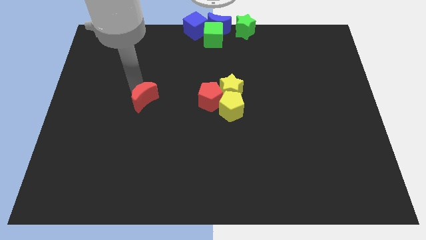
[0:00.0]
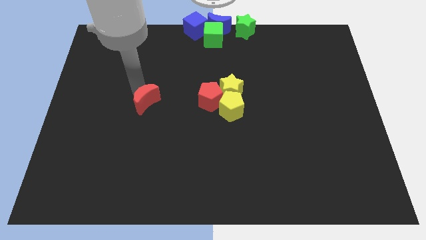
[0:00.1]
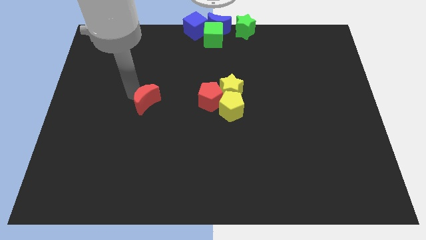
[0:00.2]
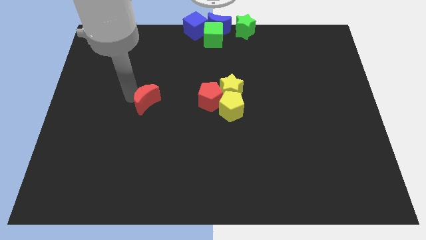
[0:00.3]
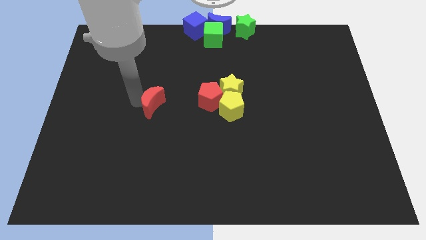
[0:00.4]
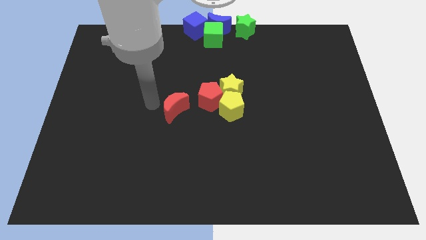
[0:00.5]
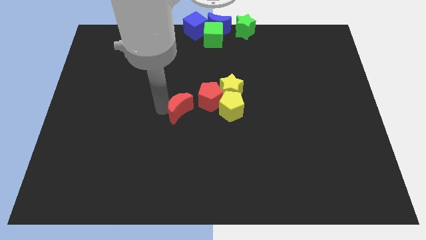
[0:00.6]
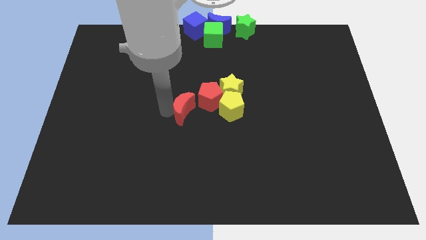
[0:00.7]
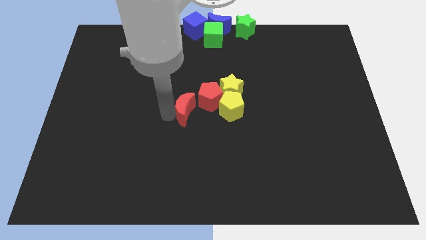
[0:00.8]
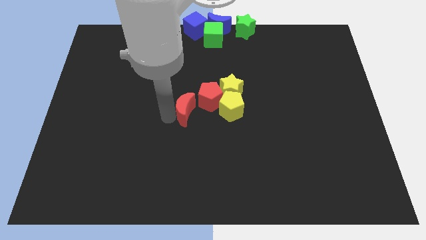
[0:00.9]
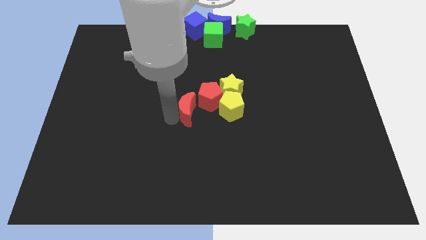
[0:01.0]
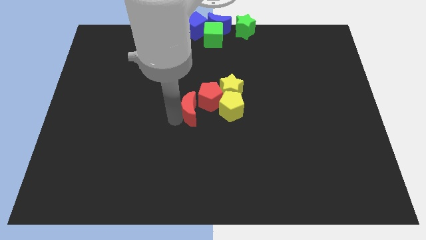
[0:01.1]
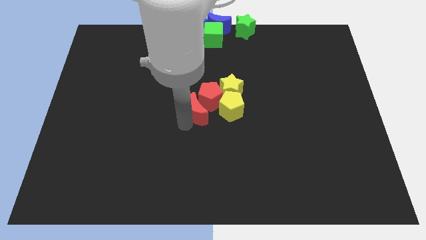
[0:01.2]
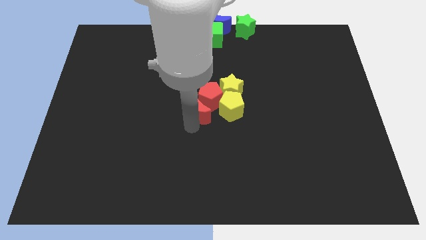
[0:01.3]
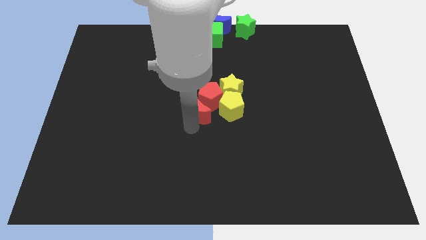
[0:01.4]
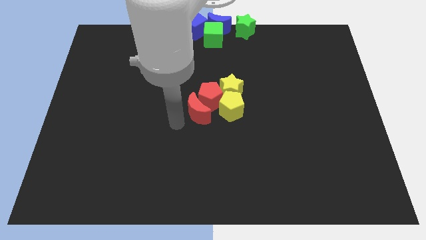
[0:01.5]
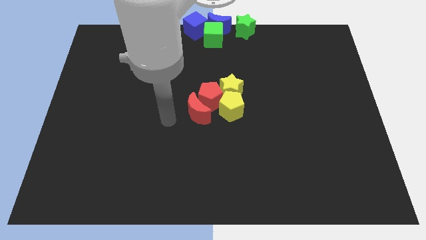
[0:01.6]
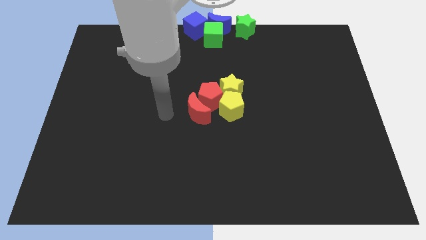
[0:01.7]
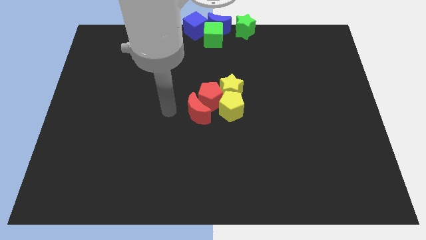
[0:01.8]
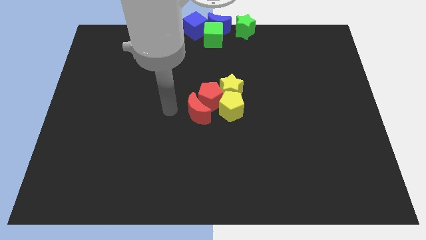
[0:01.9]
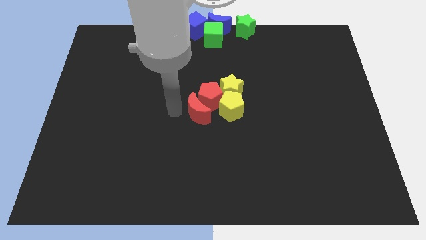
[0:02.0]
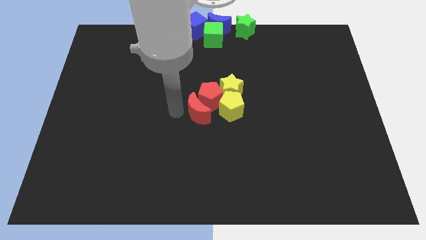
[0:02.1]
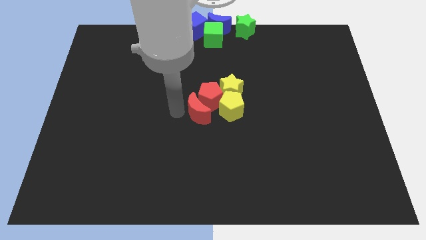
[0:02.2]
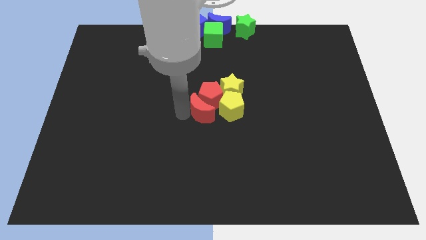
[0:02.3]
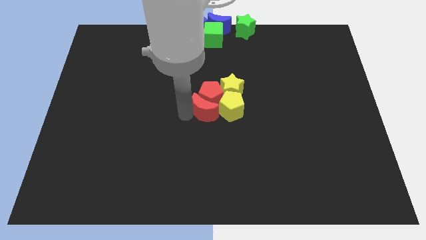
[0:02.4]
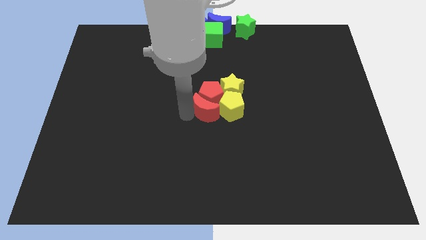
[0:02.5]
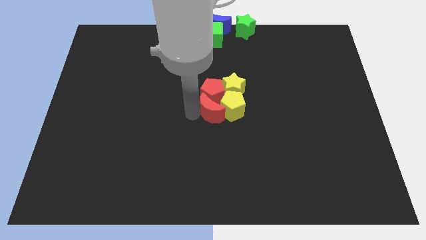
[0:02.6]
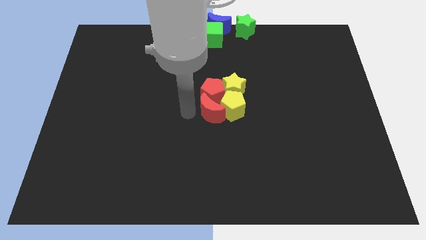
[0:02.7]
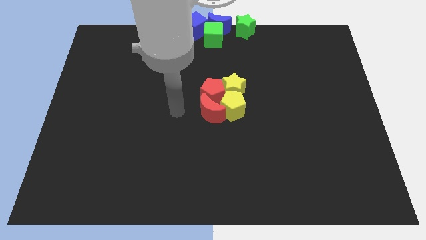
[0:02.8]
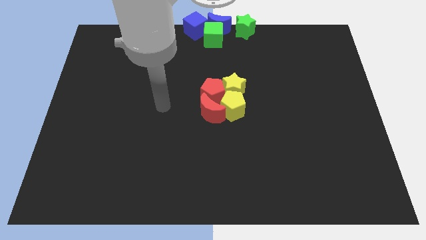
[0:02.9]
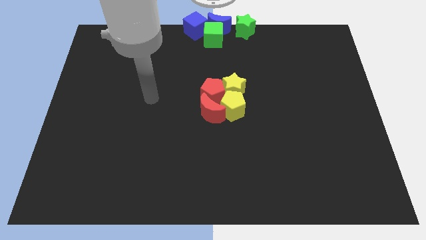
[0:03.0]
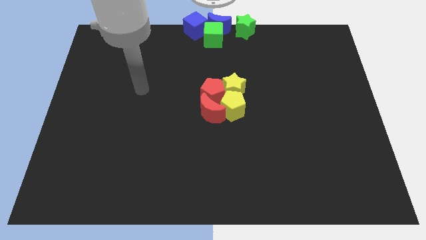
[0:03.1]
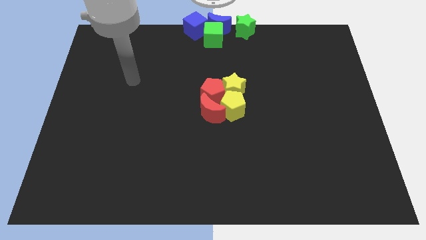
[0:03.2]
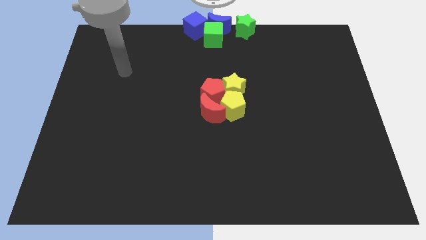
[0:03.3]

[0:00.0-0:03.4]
add the red crescent to the group of blocks at the center of the board

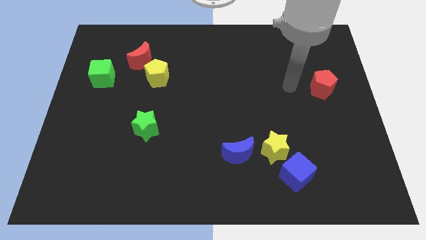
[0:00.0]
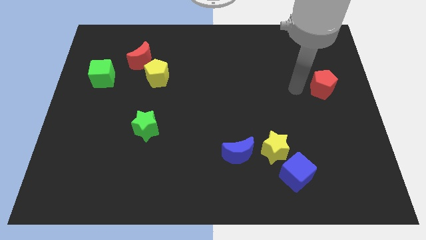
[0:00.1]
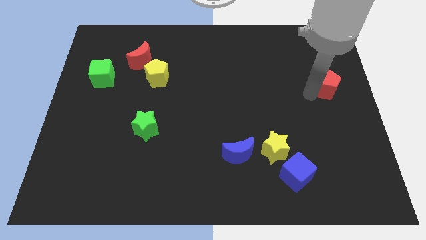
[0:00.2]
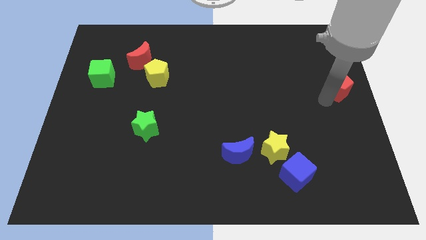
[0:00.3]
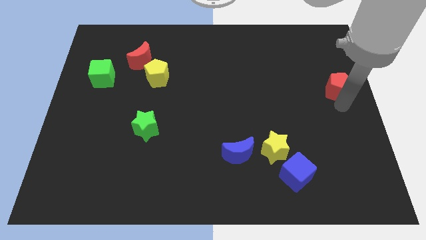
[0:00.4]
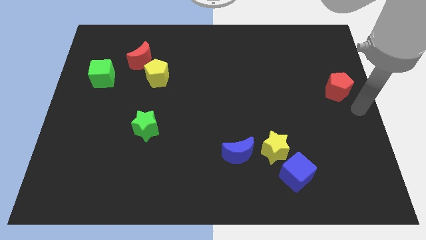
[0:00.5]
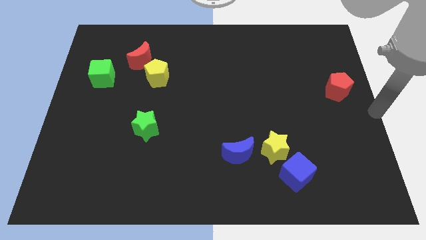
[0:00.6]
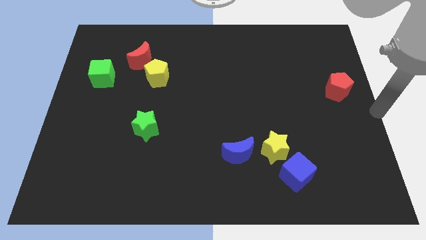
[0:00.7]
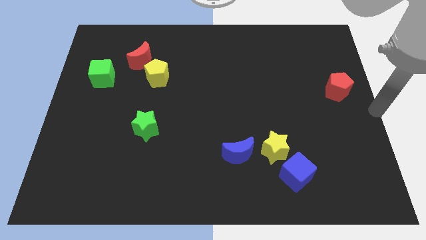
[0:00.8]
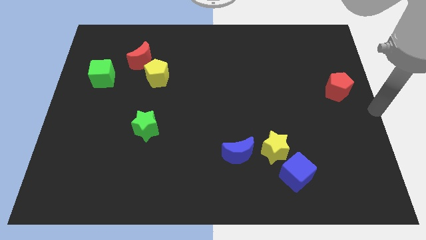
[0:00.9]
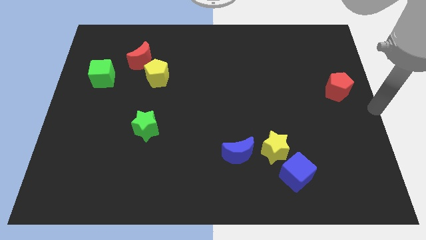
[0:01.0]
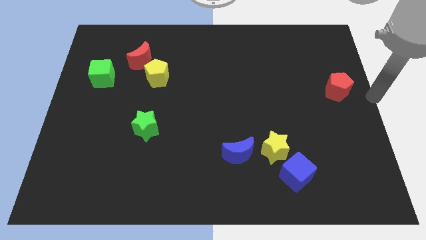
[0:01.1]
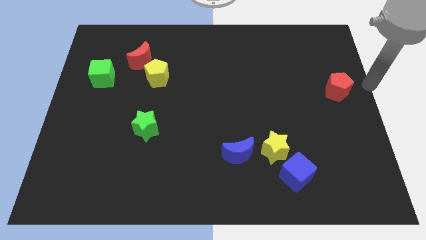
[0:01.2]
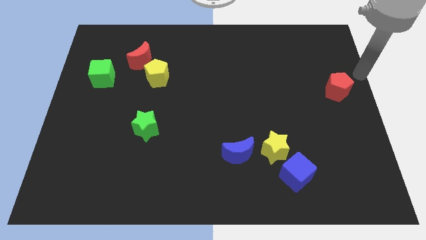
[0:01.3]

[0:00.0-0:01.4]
move your arm to the centre right of the board

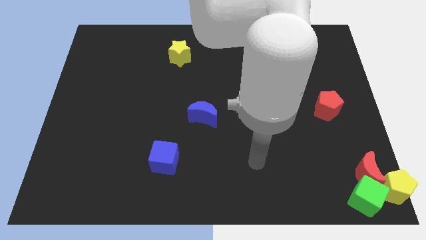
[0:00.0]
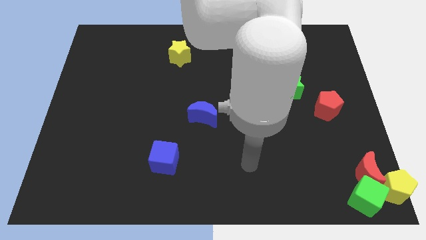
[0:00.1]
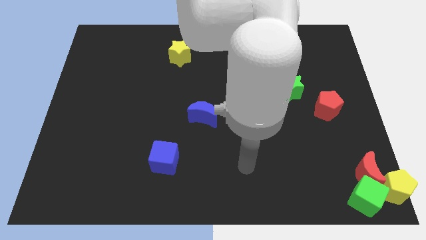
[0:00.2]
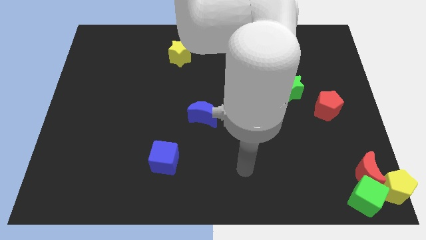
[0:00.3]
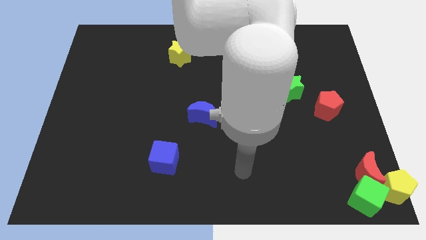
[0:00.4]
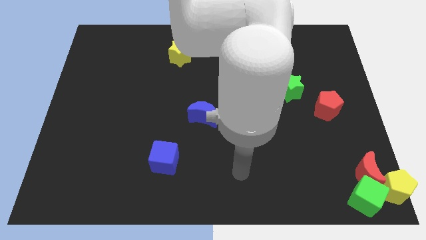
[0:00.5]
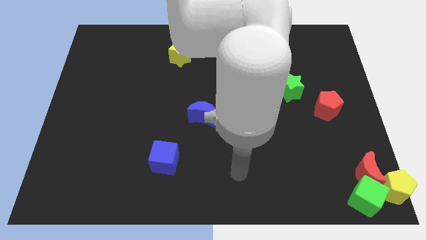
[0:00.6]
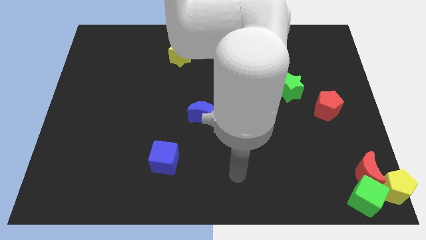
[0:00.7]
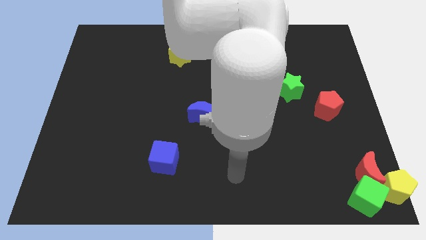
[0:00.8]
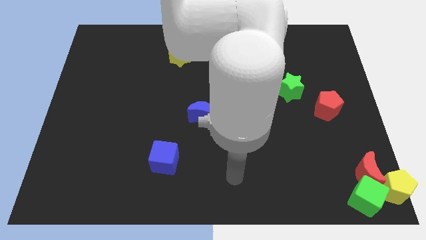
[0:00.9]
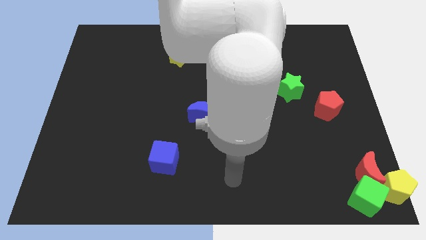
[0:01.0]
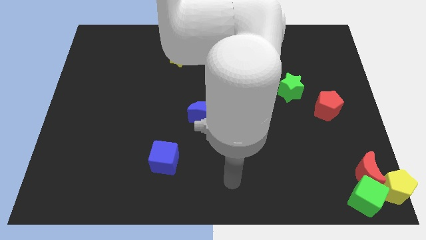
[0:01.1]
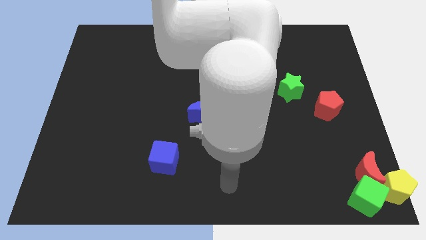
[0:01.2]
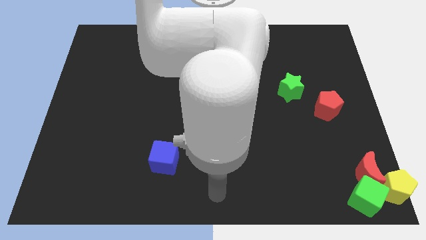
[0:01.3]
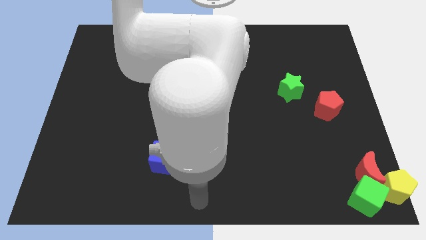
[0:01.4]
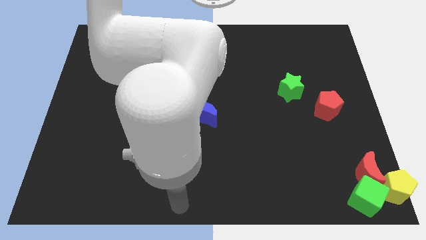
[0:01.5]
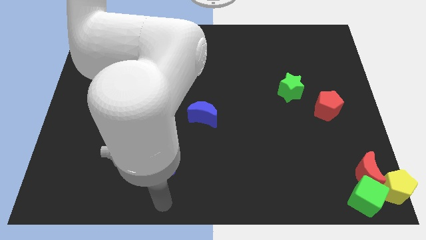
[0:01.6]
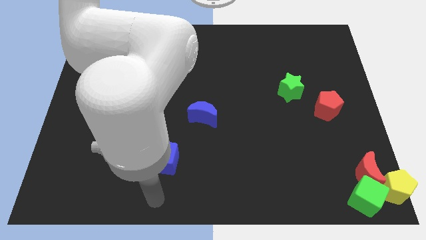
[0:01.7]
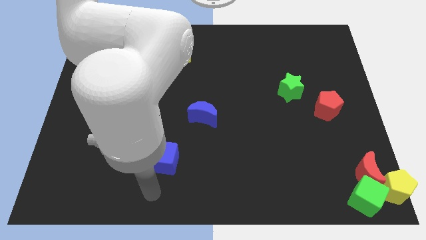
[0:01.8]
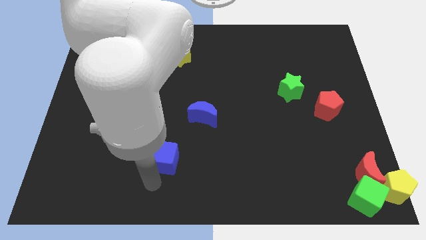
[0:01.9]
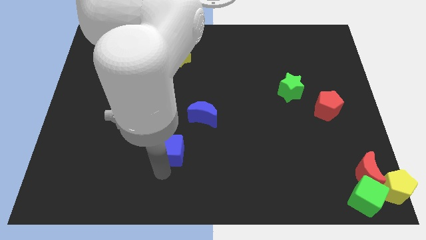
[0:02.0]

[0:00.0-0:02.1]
move your arm to the bottom of the blue cube

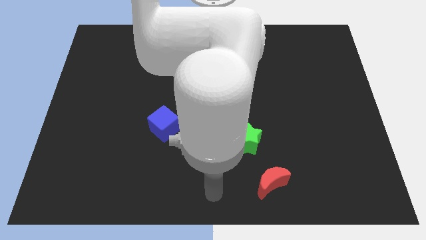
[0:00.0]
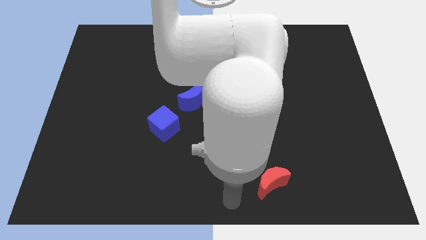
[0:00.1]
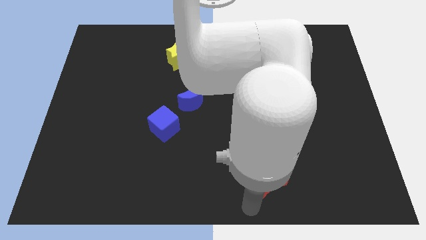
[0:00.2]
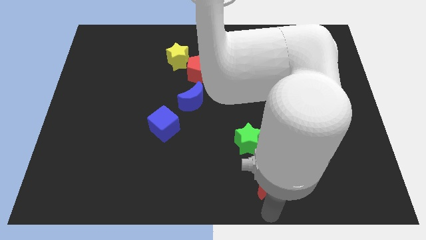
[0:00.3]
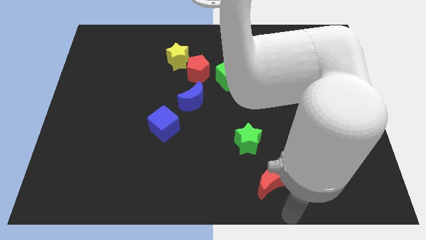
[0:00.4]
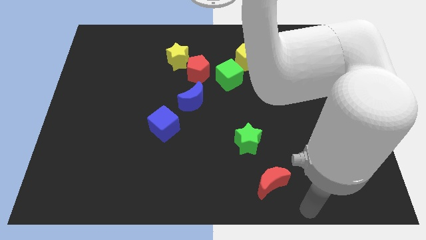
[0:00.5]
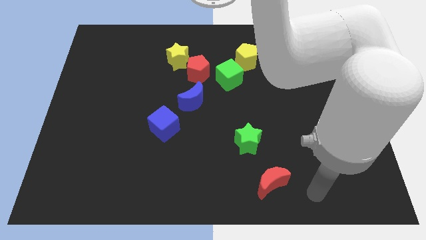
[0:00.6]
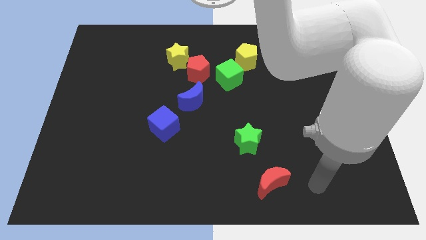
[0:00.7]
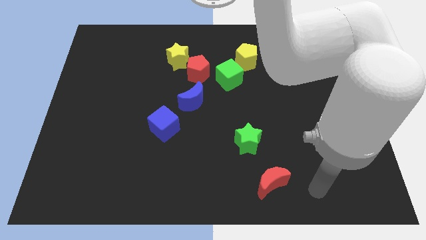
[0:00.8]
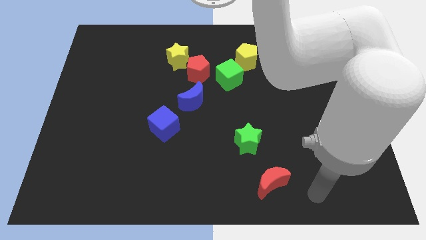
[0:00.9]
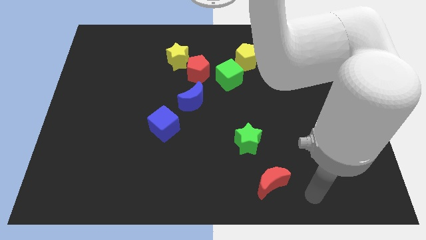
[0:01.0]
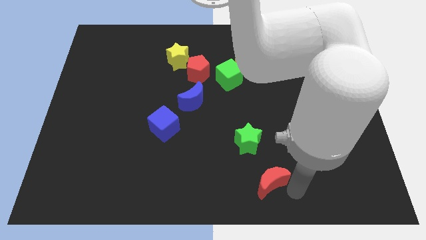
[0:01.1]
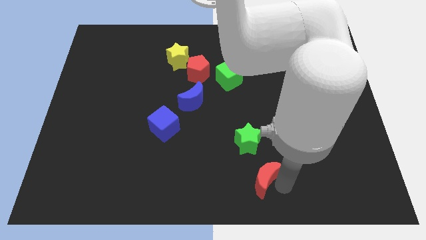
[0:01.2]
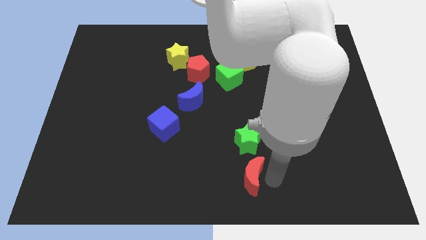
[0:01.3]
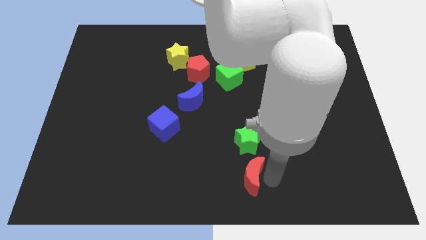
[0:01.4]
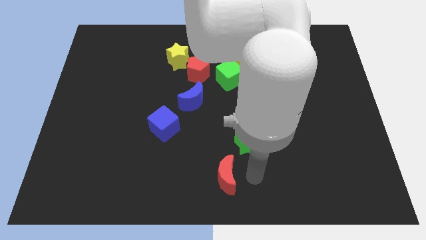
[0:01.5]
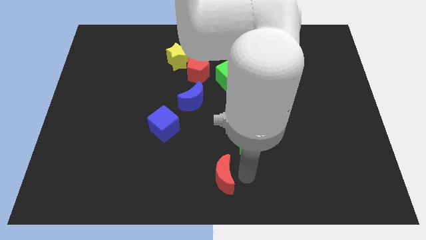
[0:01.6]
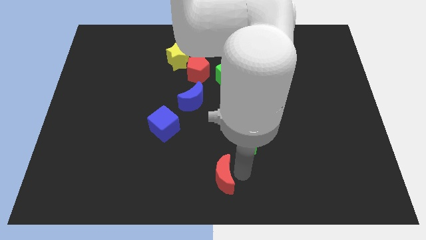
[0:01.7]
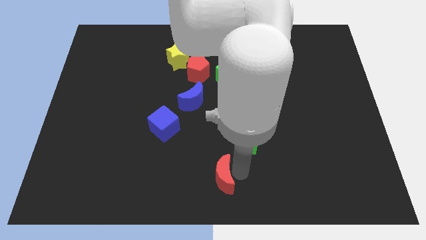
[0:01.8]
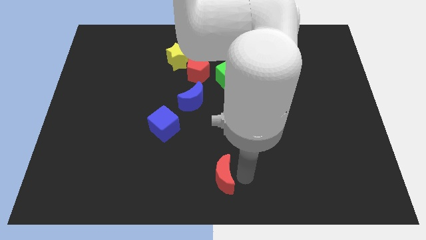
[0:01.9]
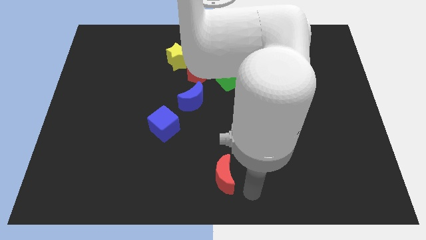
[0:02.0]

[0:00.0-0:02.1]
move red moon towards the bottom center of the board
